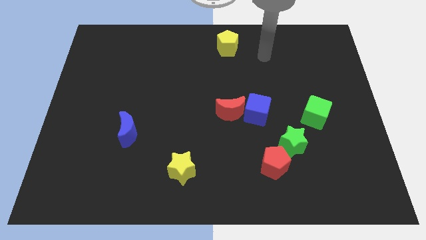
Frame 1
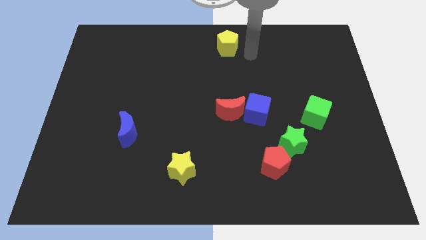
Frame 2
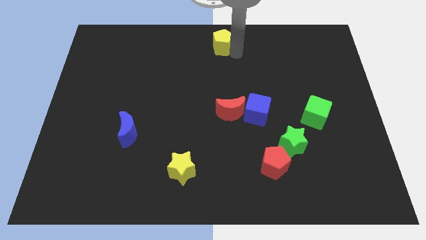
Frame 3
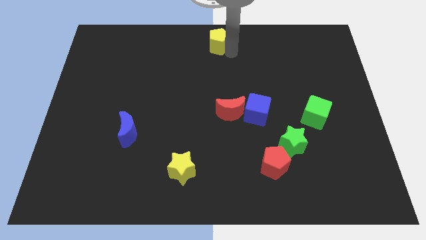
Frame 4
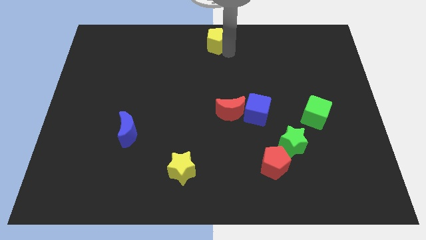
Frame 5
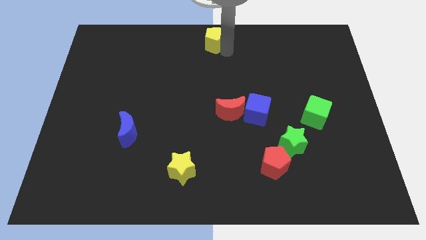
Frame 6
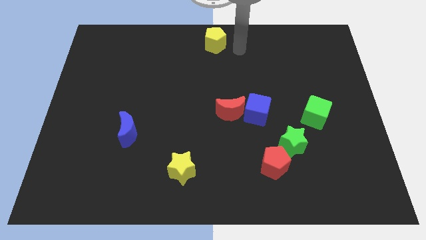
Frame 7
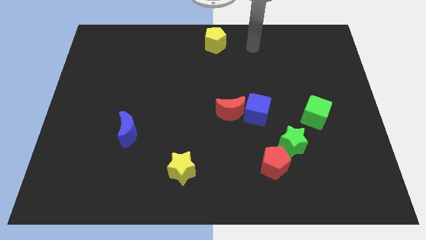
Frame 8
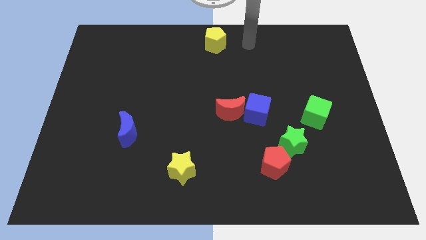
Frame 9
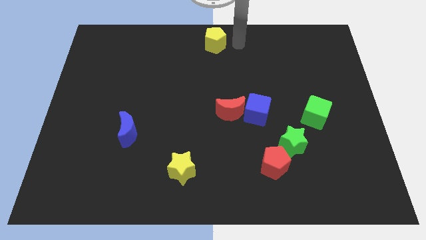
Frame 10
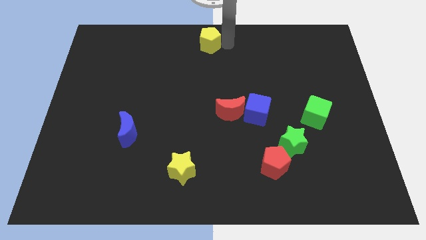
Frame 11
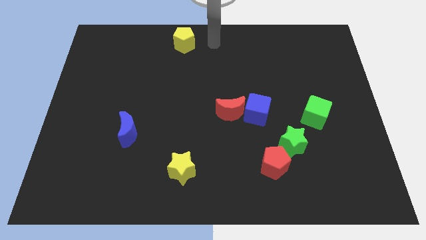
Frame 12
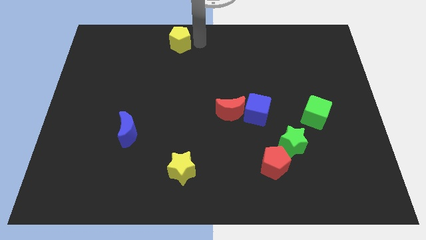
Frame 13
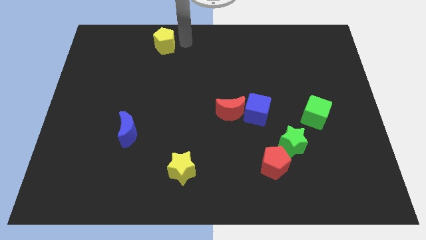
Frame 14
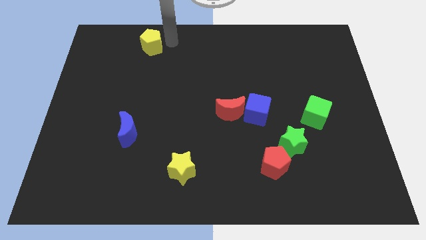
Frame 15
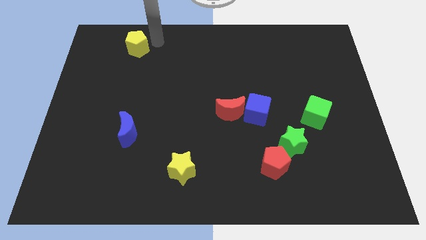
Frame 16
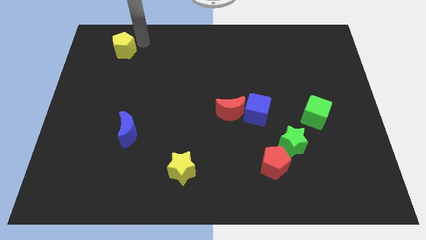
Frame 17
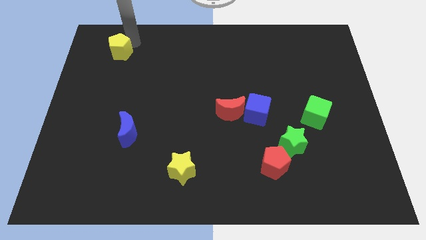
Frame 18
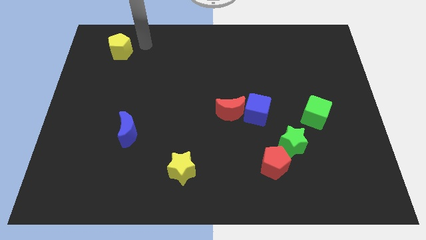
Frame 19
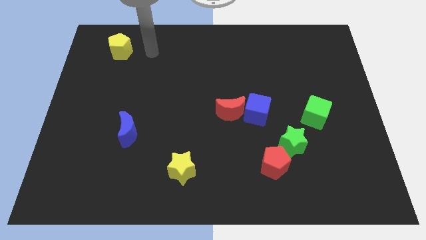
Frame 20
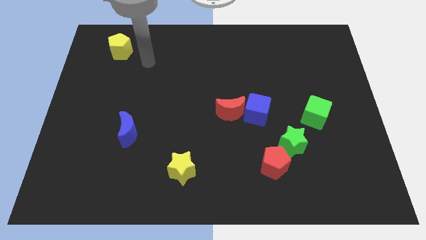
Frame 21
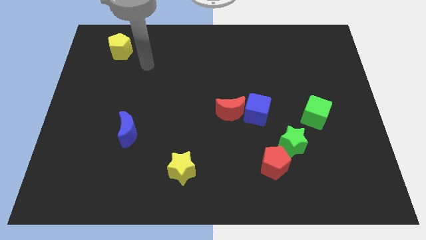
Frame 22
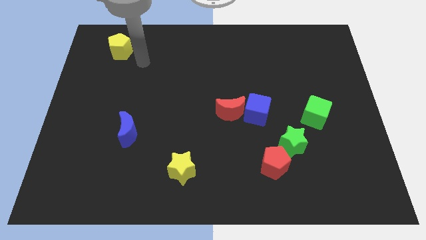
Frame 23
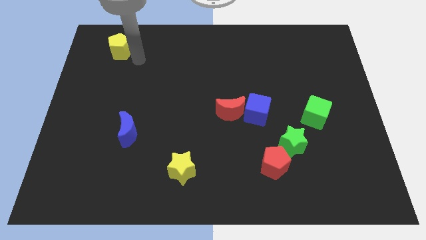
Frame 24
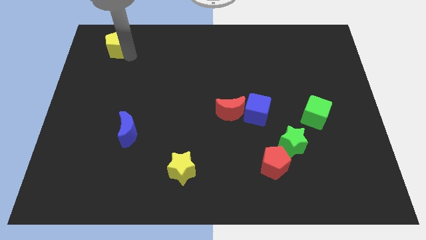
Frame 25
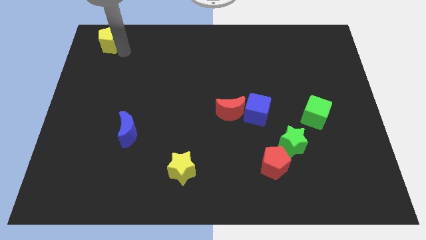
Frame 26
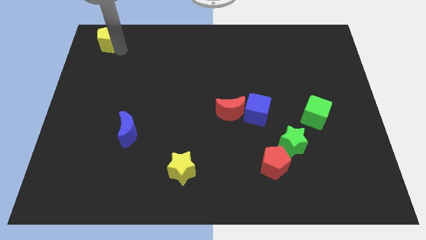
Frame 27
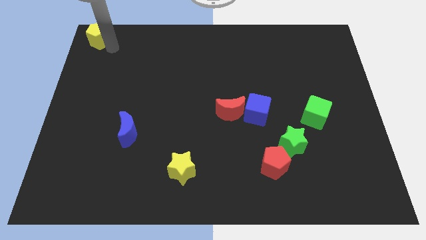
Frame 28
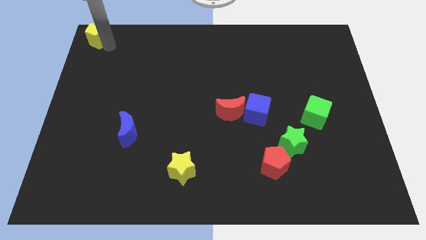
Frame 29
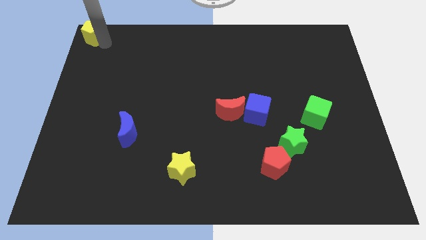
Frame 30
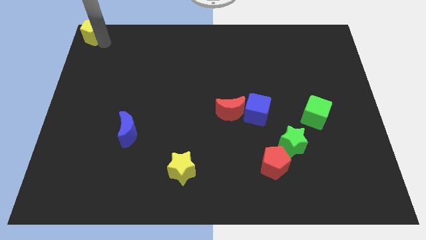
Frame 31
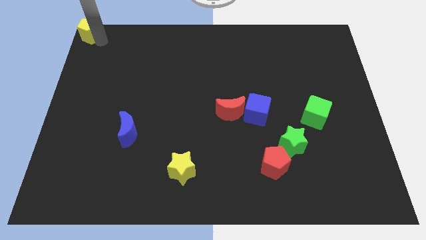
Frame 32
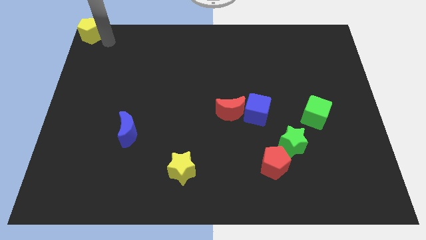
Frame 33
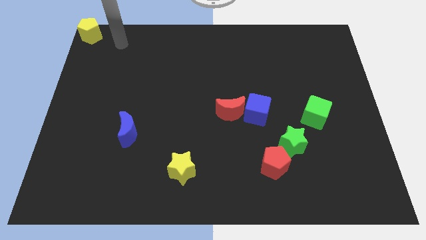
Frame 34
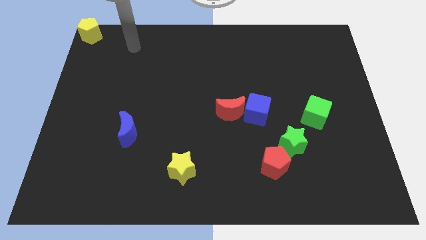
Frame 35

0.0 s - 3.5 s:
slide the yellow pentagon diagonally top left to the blue moon

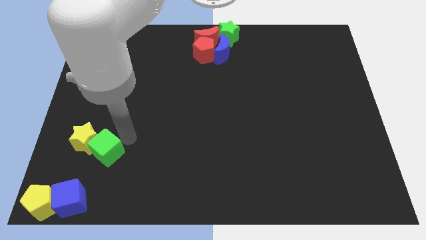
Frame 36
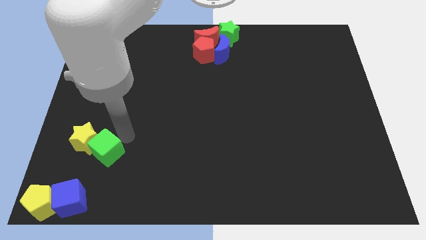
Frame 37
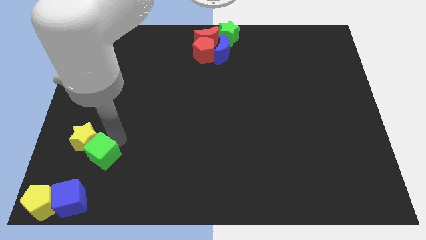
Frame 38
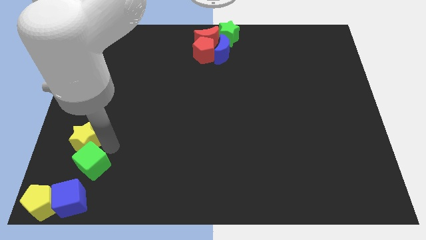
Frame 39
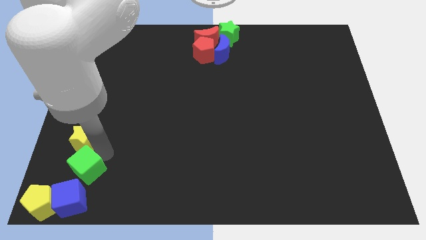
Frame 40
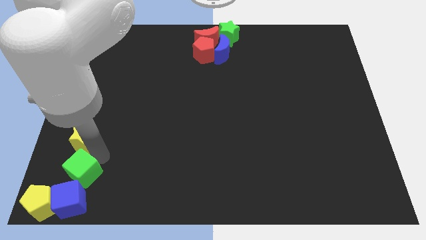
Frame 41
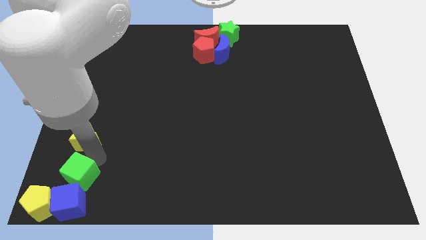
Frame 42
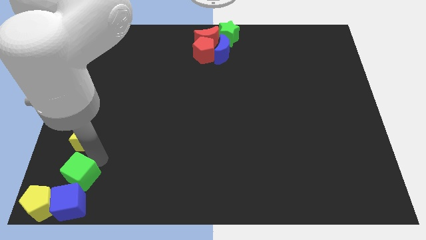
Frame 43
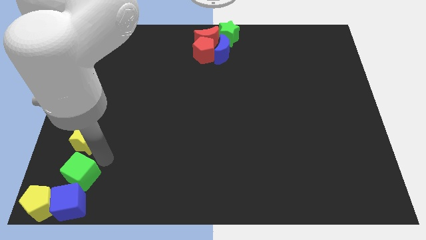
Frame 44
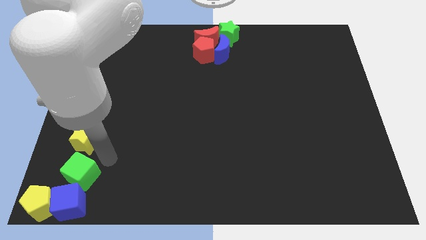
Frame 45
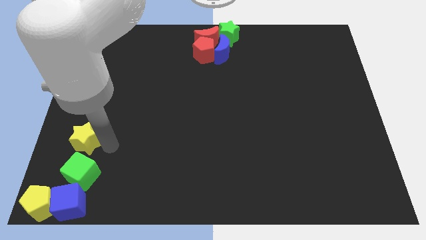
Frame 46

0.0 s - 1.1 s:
separate the blue cube from the yellow star

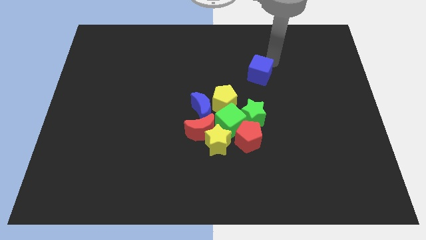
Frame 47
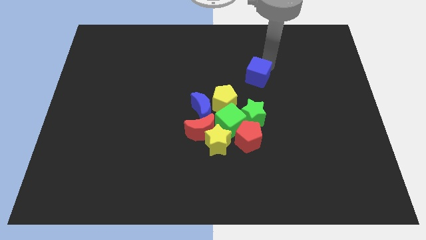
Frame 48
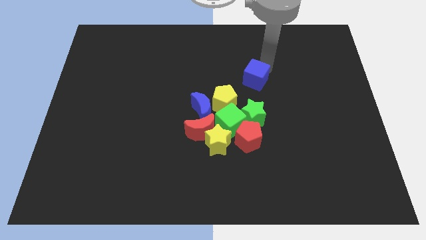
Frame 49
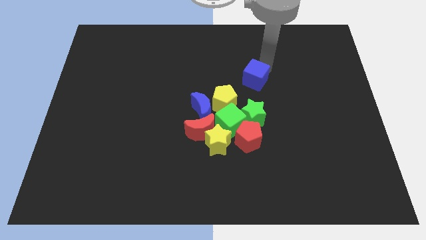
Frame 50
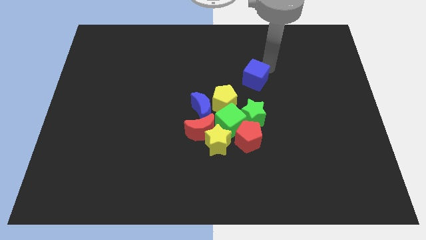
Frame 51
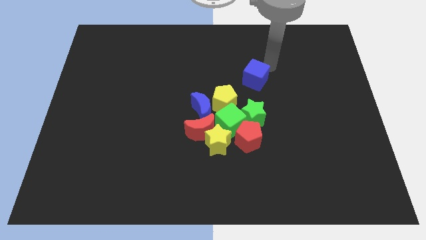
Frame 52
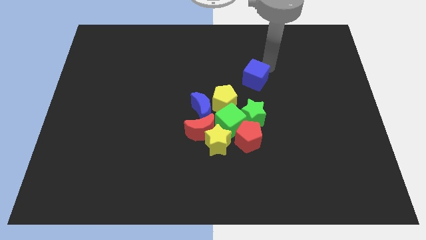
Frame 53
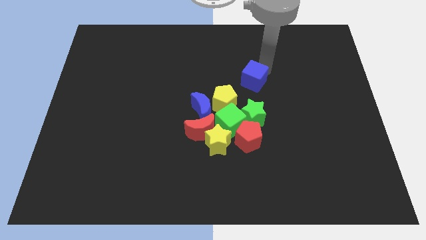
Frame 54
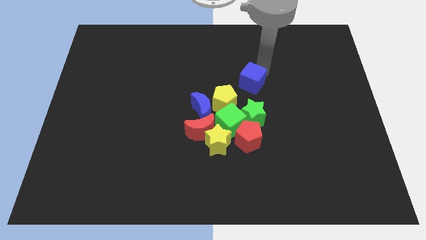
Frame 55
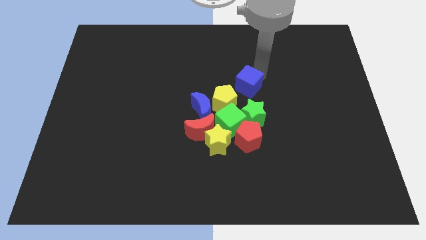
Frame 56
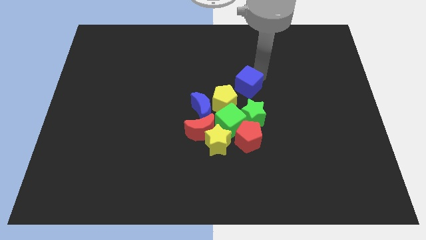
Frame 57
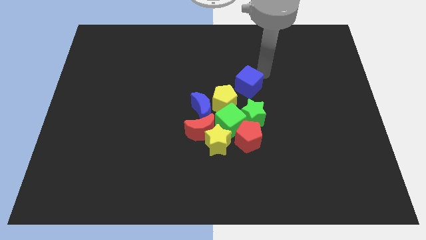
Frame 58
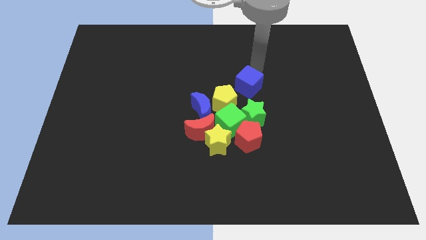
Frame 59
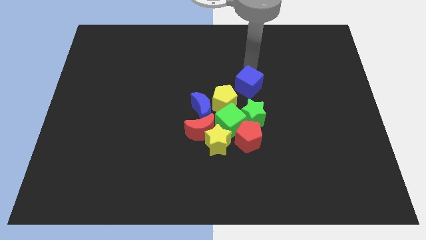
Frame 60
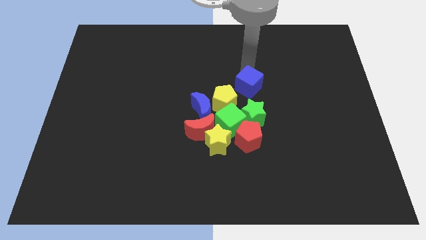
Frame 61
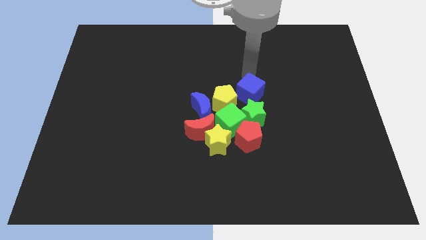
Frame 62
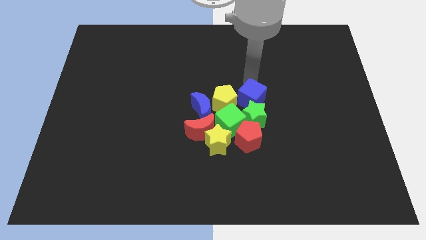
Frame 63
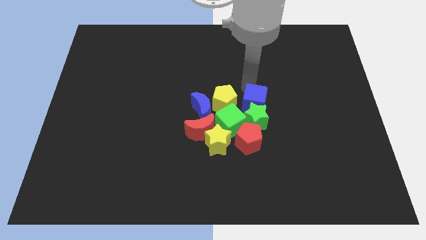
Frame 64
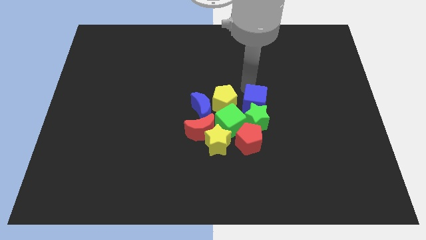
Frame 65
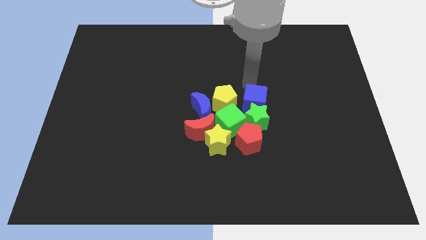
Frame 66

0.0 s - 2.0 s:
move the blue cube into the top of the green star

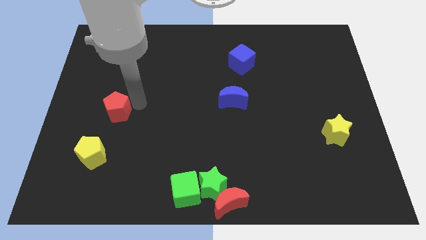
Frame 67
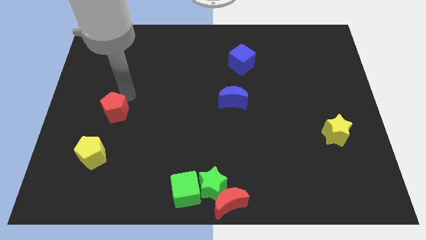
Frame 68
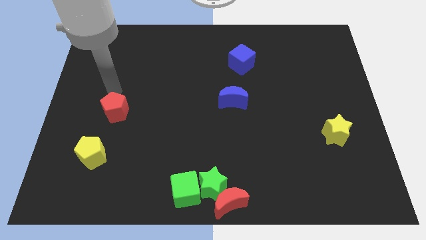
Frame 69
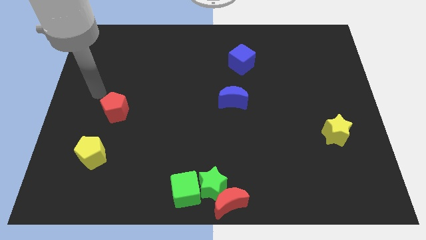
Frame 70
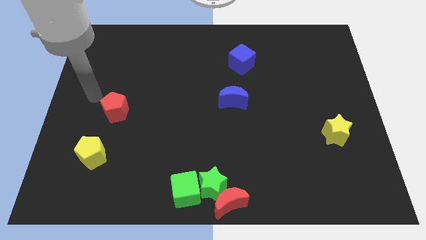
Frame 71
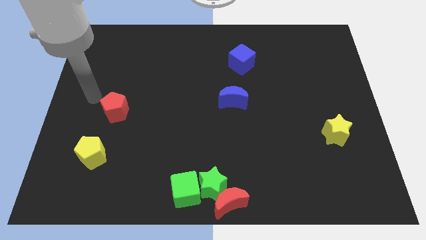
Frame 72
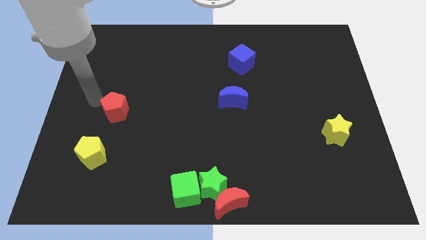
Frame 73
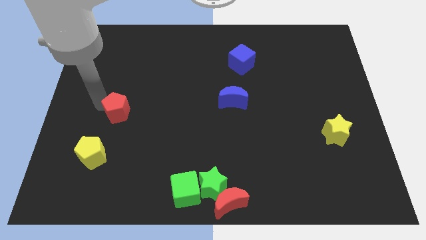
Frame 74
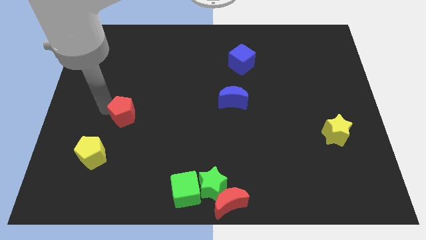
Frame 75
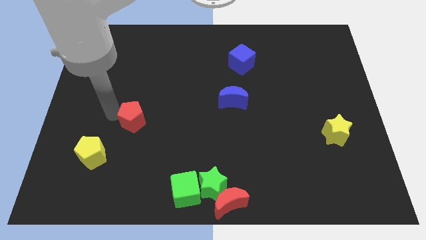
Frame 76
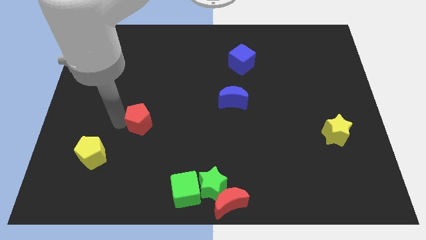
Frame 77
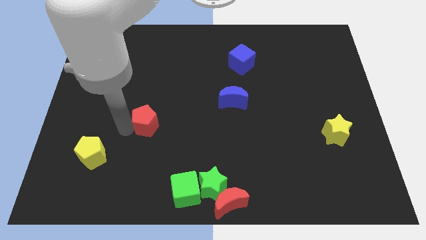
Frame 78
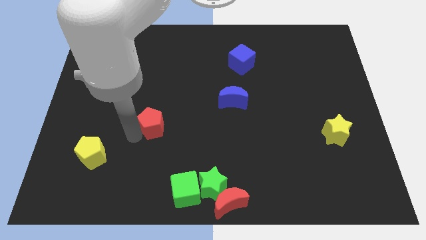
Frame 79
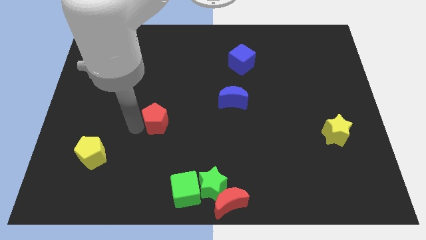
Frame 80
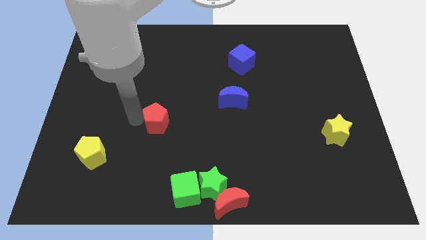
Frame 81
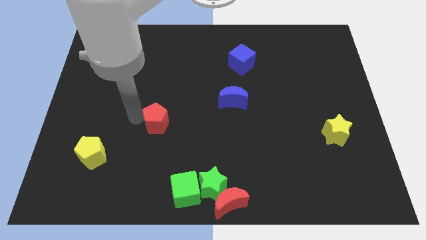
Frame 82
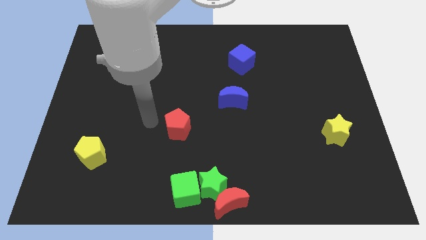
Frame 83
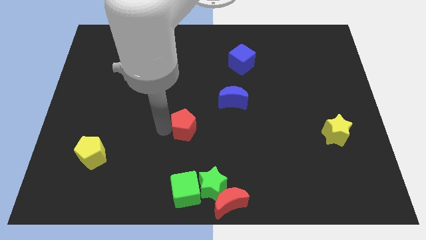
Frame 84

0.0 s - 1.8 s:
push the red pentagon vertically to the top side of the green cube

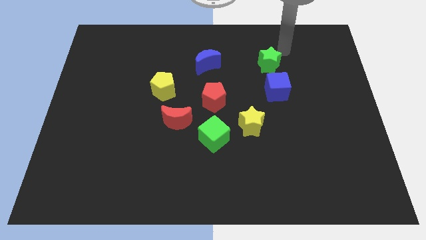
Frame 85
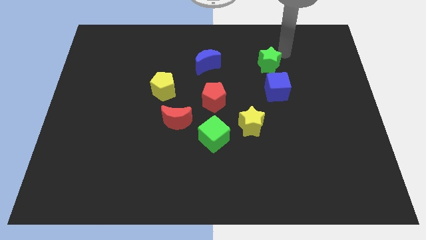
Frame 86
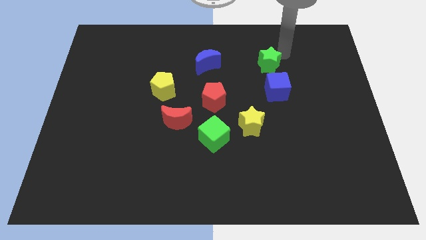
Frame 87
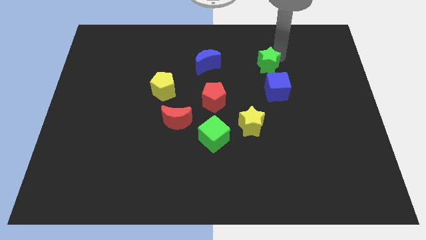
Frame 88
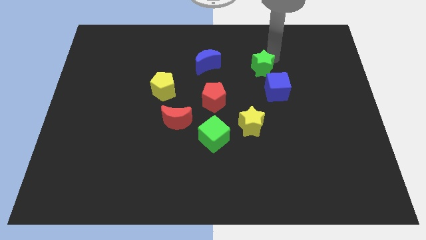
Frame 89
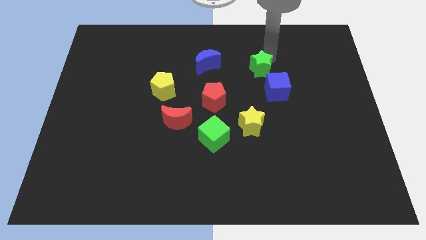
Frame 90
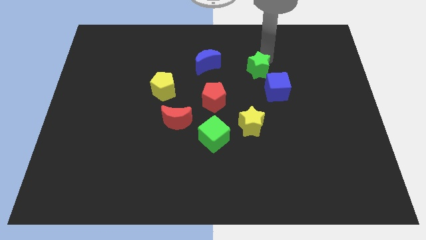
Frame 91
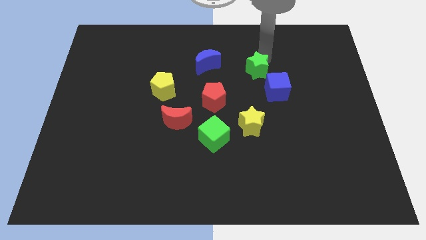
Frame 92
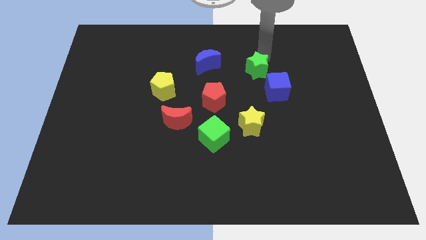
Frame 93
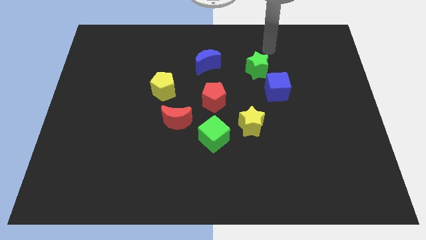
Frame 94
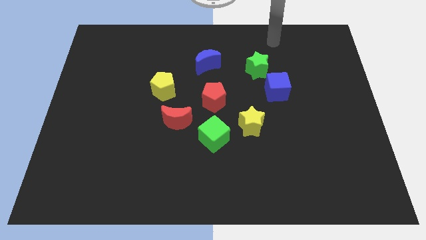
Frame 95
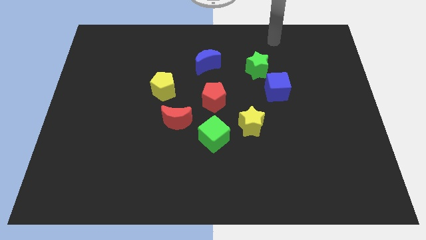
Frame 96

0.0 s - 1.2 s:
move the green star to the top of the blue cube
